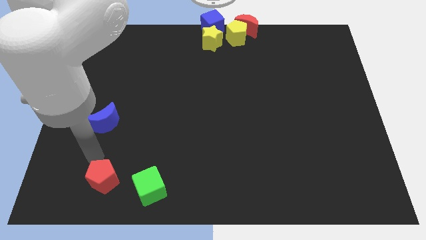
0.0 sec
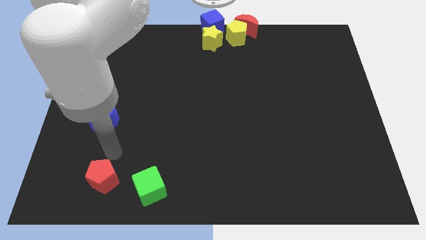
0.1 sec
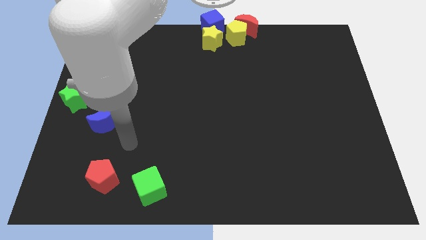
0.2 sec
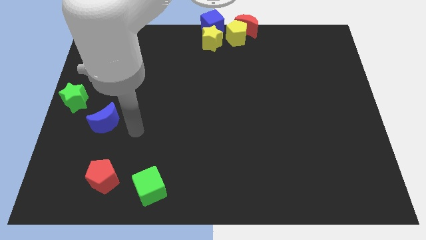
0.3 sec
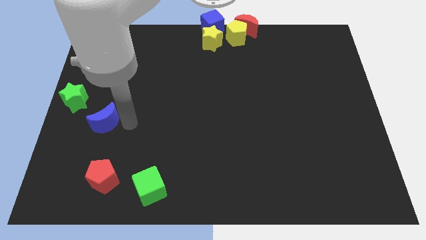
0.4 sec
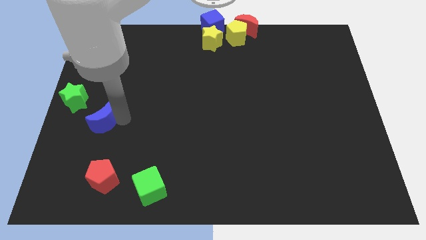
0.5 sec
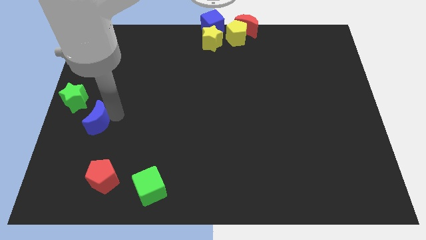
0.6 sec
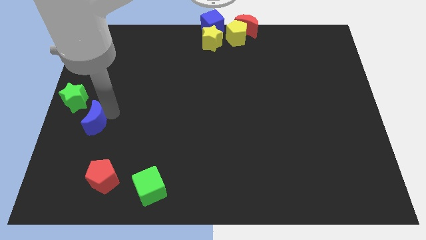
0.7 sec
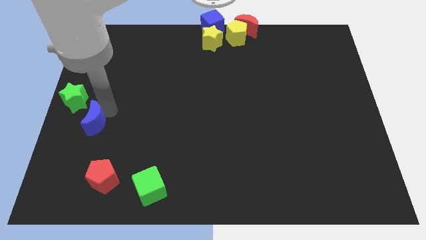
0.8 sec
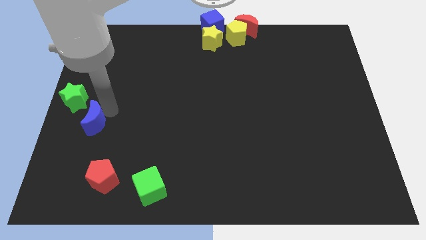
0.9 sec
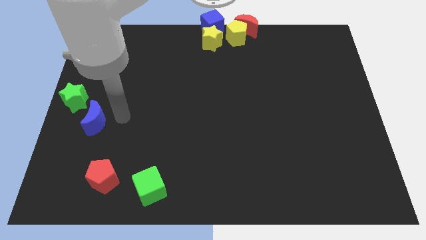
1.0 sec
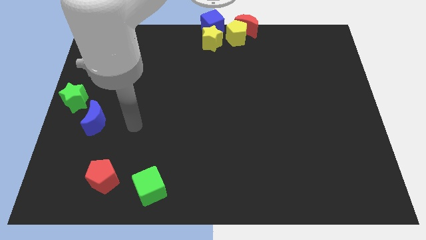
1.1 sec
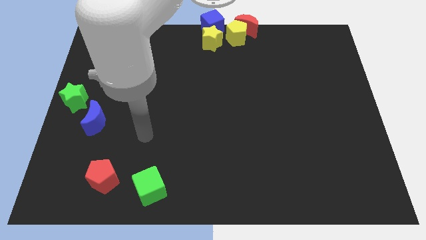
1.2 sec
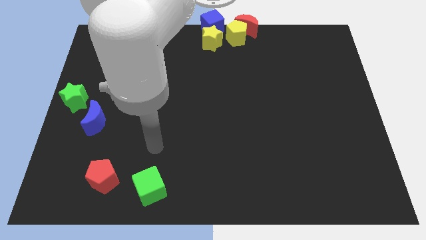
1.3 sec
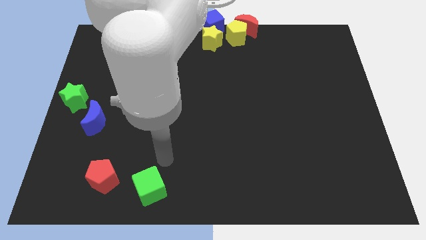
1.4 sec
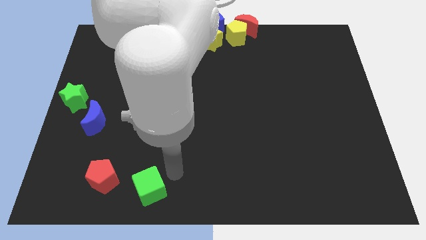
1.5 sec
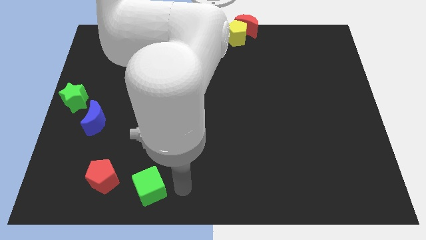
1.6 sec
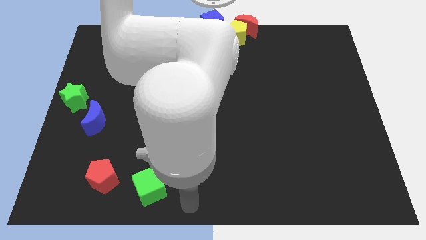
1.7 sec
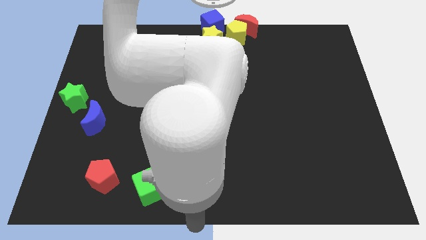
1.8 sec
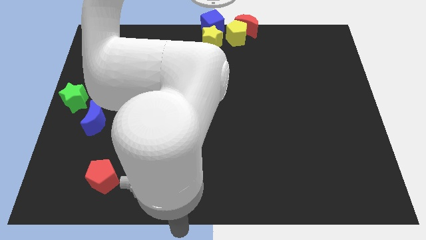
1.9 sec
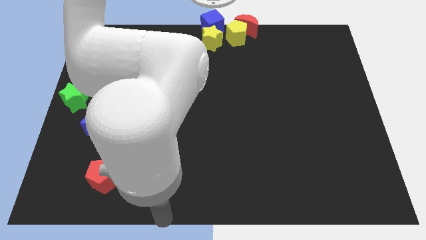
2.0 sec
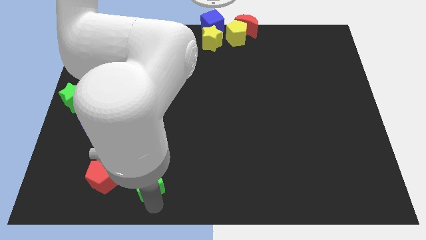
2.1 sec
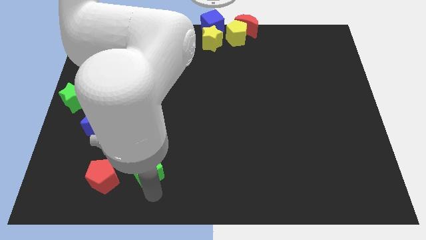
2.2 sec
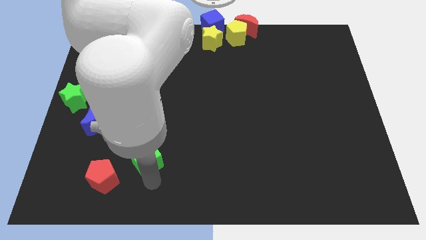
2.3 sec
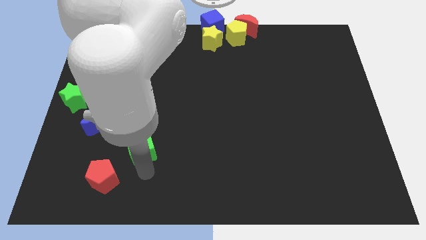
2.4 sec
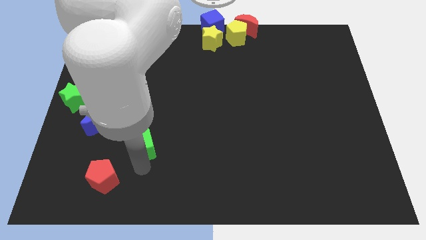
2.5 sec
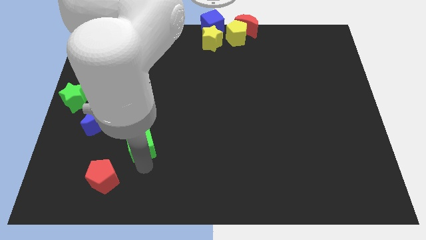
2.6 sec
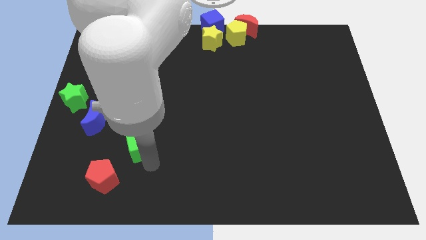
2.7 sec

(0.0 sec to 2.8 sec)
place the green cube diagonal to the red pentagon

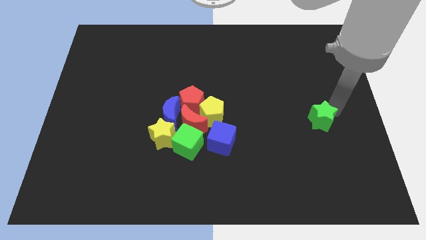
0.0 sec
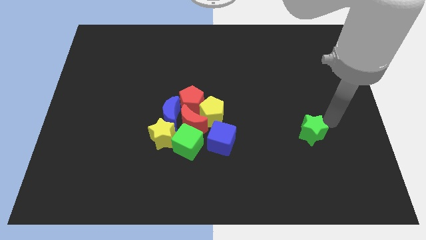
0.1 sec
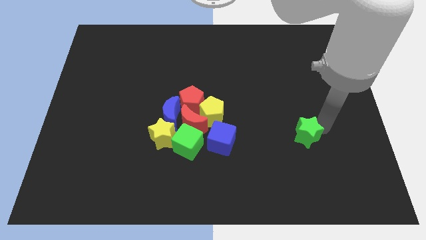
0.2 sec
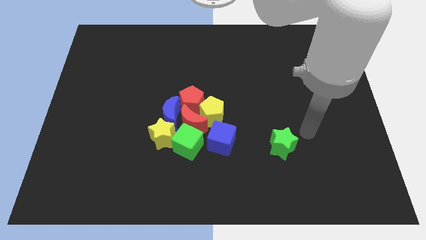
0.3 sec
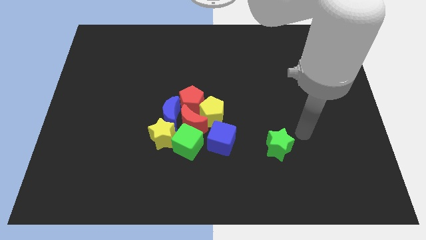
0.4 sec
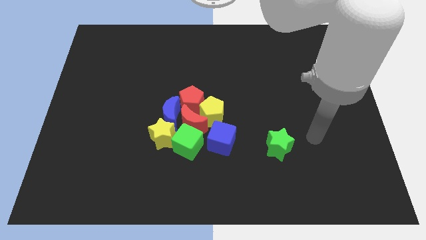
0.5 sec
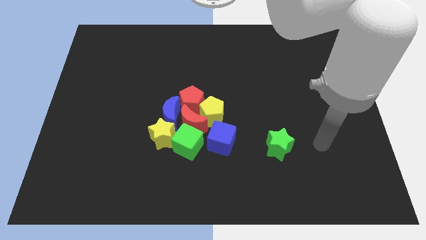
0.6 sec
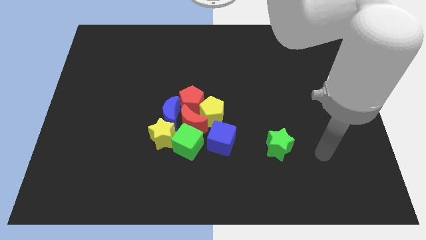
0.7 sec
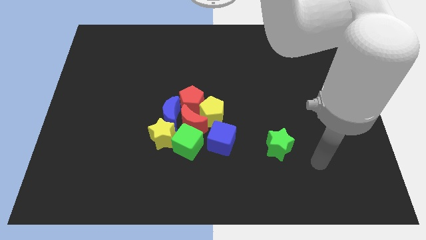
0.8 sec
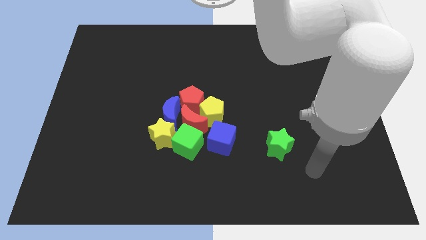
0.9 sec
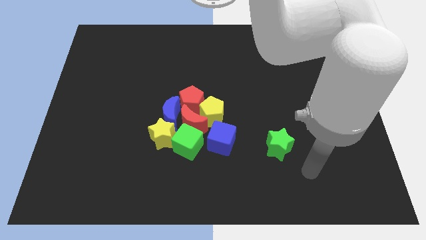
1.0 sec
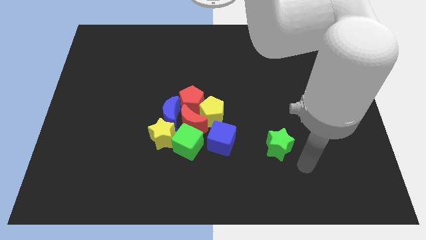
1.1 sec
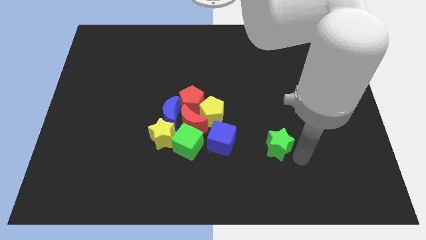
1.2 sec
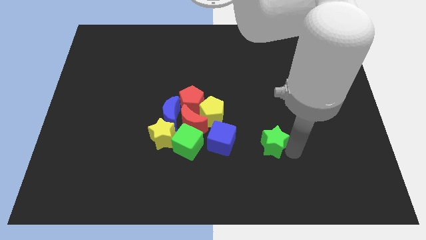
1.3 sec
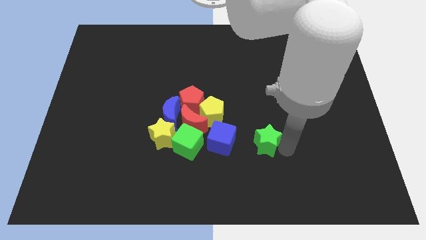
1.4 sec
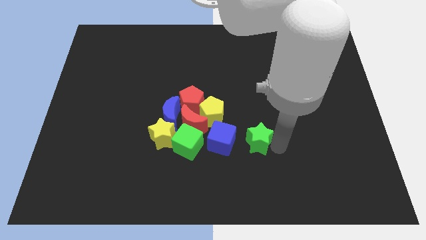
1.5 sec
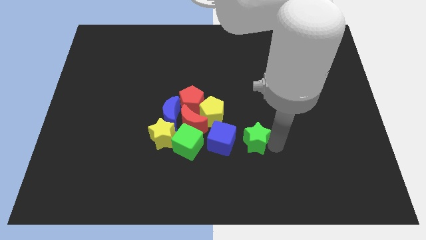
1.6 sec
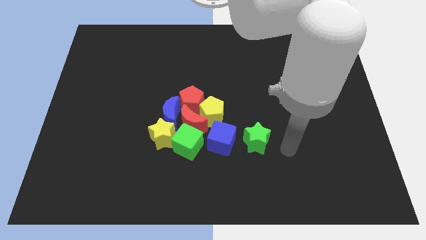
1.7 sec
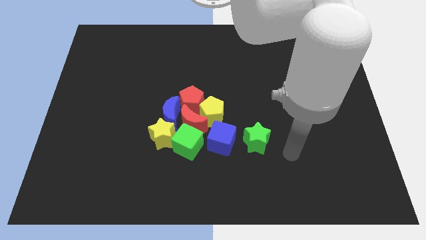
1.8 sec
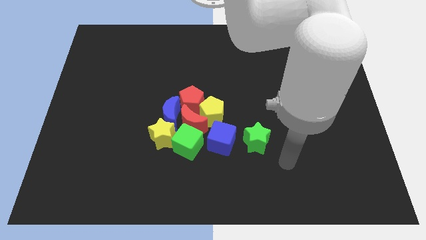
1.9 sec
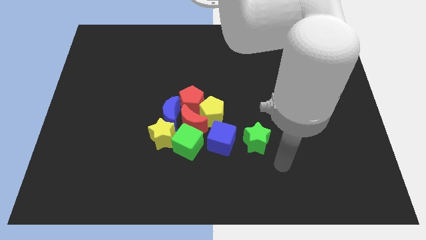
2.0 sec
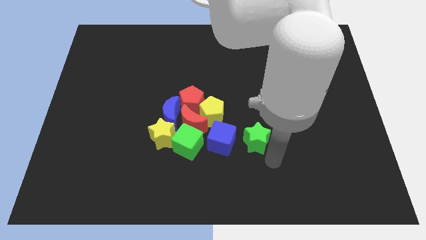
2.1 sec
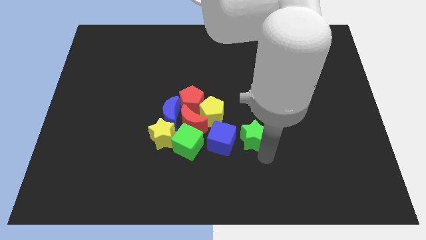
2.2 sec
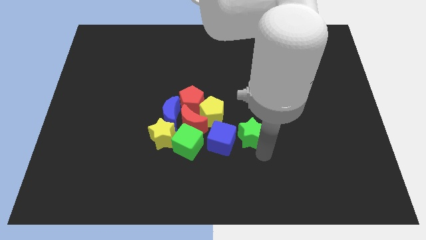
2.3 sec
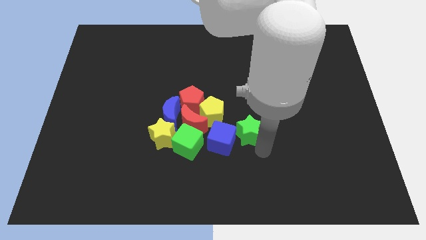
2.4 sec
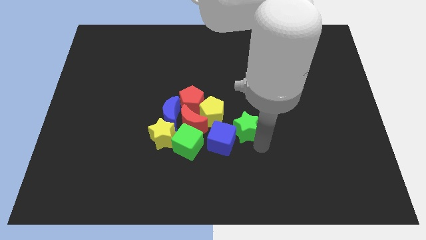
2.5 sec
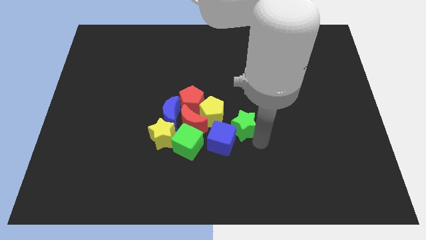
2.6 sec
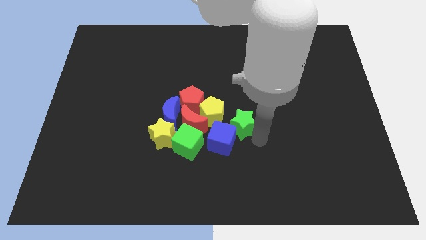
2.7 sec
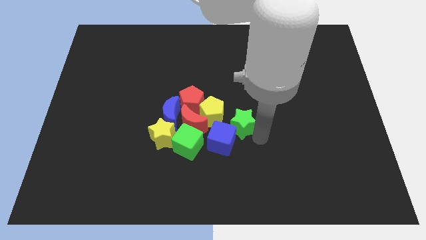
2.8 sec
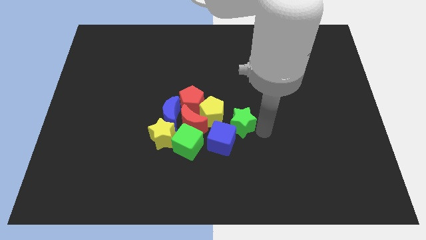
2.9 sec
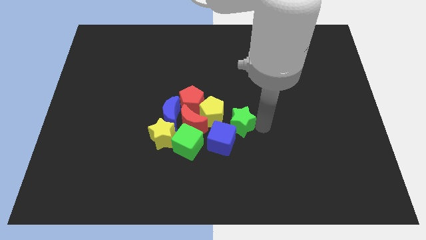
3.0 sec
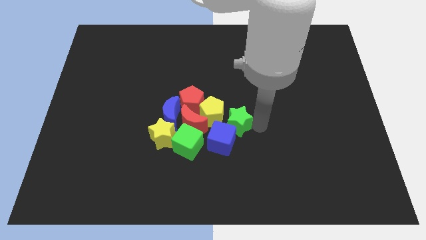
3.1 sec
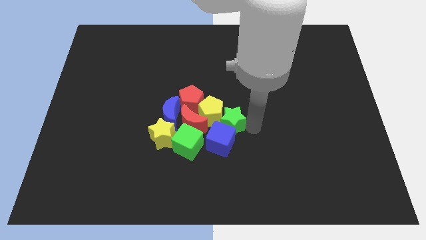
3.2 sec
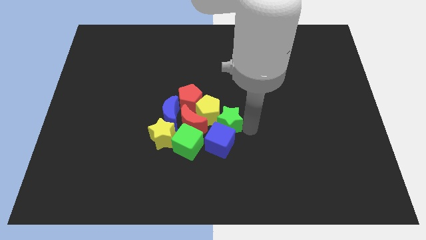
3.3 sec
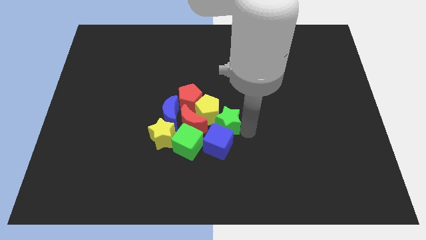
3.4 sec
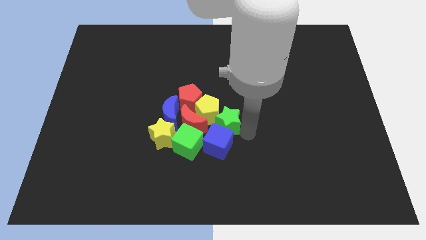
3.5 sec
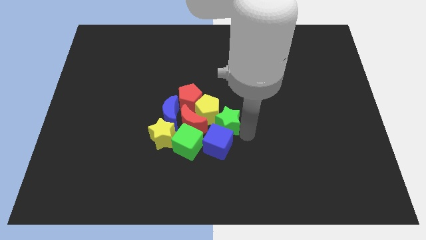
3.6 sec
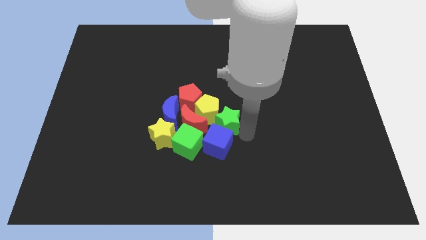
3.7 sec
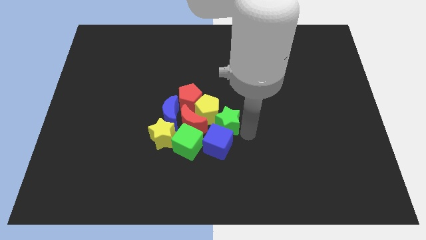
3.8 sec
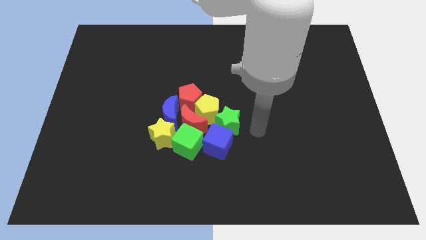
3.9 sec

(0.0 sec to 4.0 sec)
move the green star into the yellow pentgaon

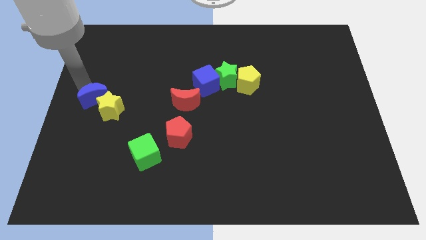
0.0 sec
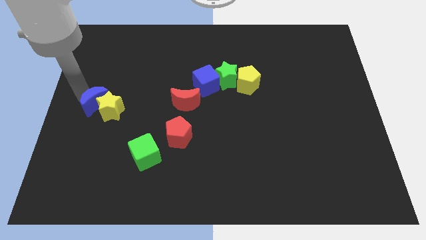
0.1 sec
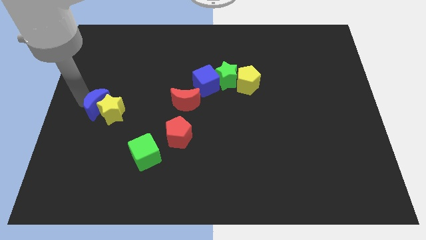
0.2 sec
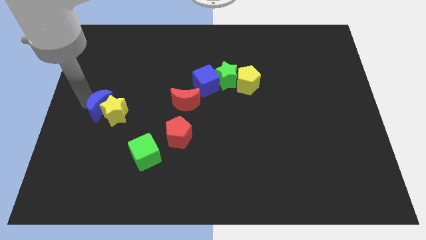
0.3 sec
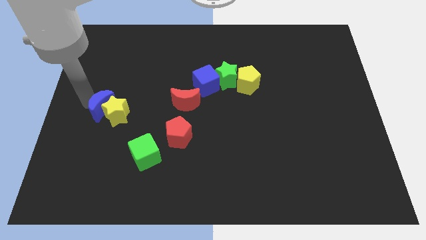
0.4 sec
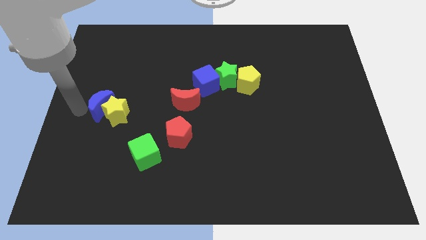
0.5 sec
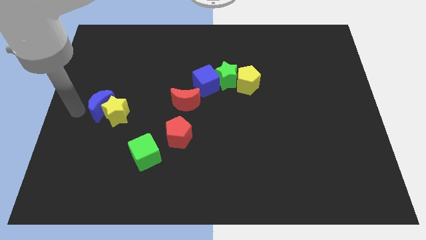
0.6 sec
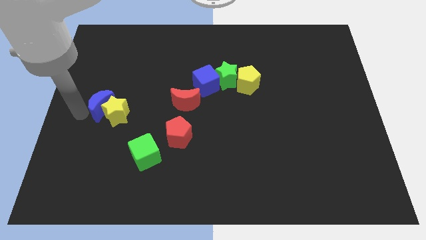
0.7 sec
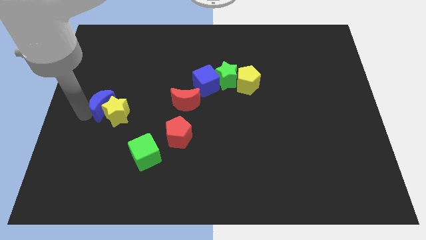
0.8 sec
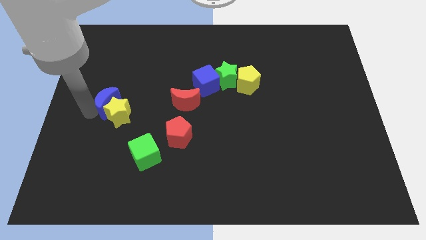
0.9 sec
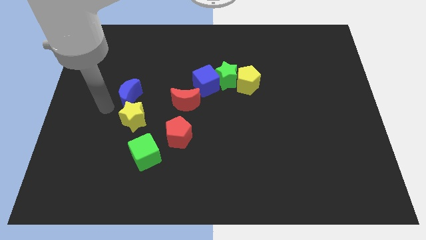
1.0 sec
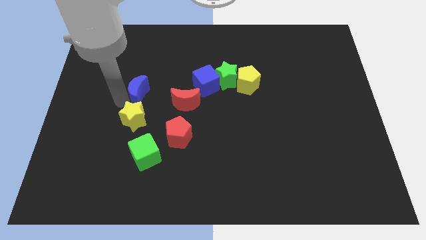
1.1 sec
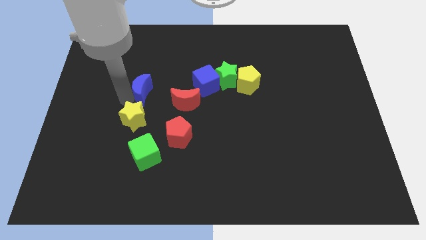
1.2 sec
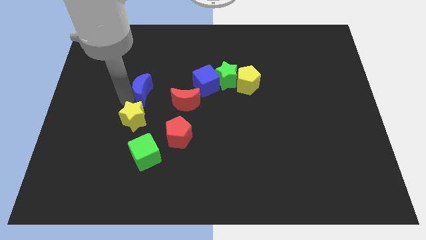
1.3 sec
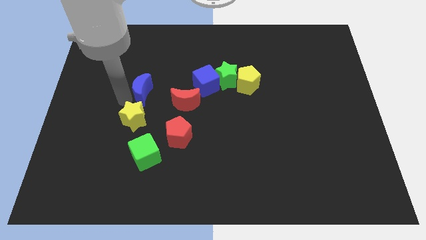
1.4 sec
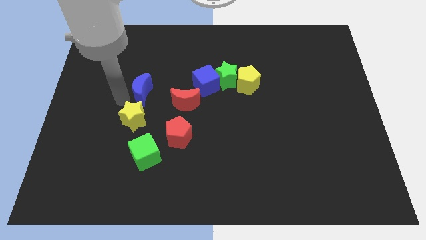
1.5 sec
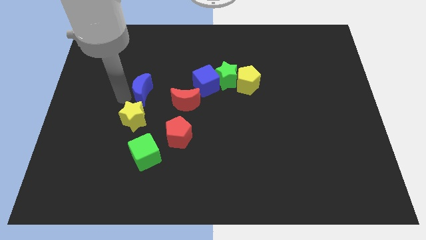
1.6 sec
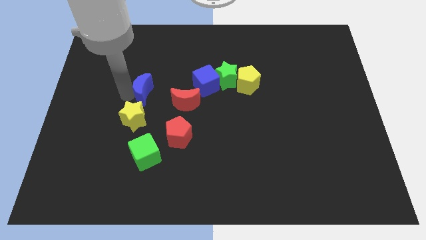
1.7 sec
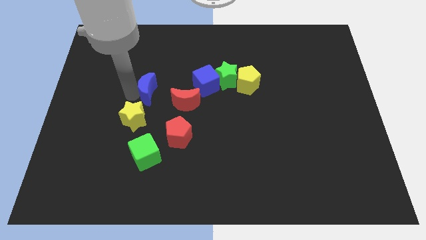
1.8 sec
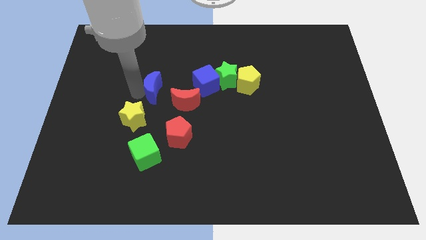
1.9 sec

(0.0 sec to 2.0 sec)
put the blue moon diagonally top right to the yellow star
